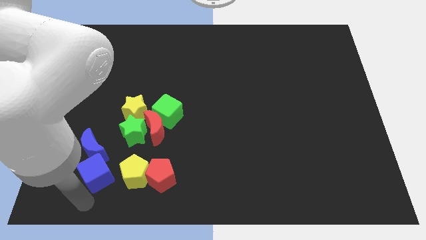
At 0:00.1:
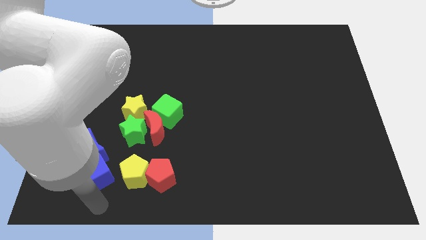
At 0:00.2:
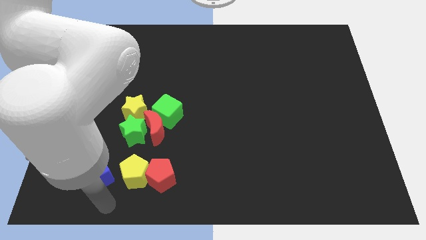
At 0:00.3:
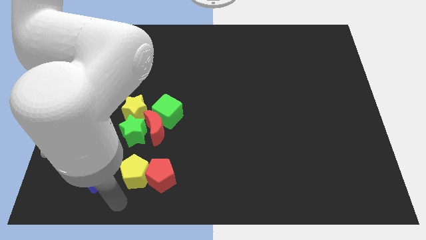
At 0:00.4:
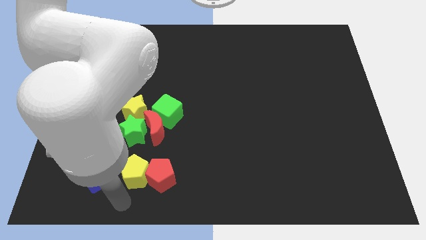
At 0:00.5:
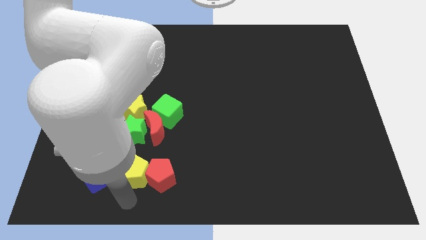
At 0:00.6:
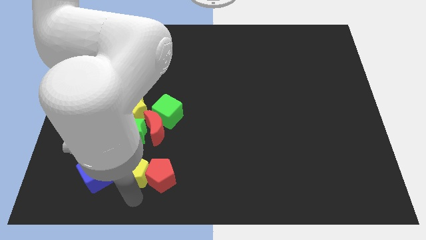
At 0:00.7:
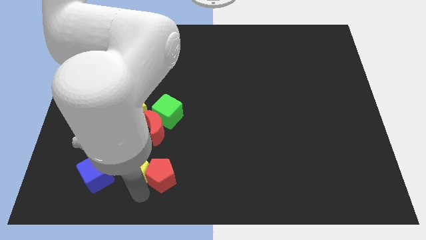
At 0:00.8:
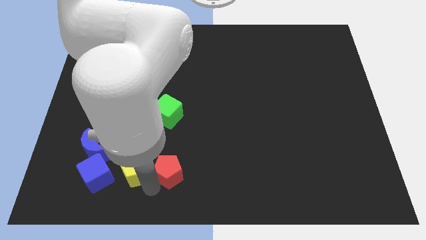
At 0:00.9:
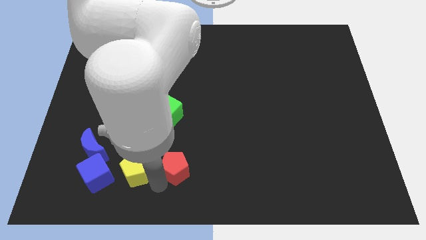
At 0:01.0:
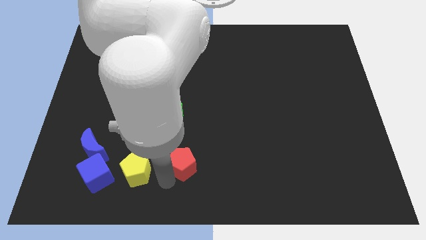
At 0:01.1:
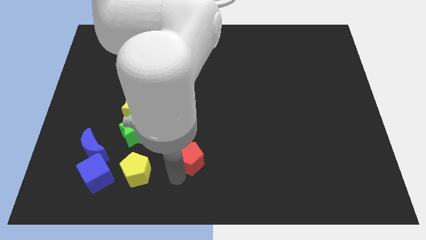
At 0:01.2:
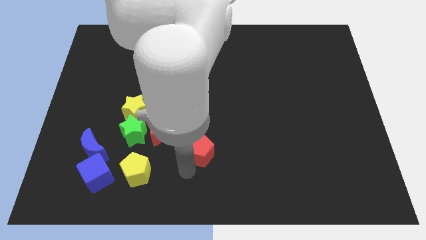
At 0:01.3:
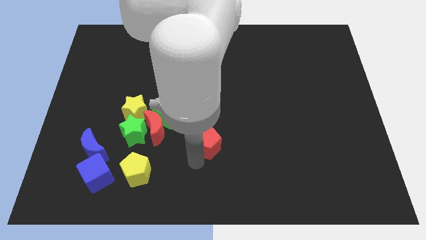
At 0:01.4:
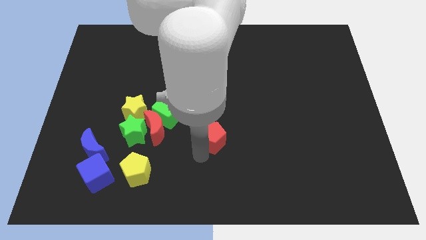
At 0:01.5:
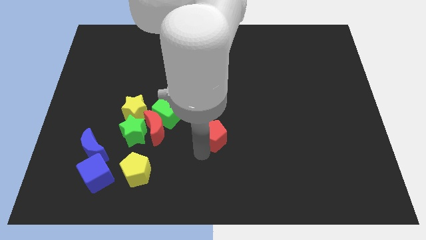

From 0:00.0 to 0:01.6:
place the red pentagon to the right of the red moon

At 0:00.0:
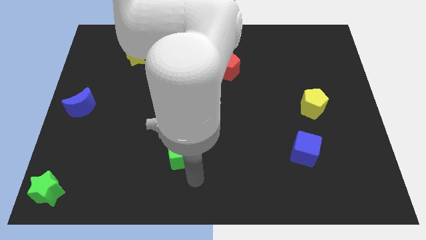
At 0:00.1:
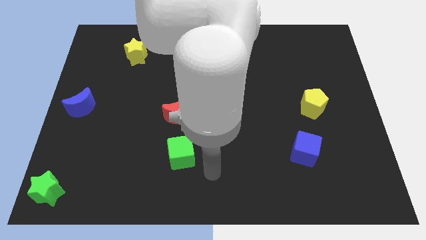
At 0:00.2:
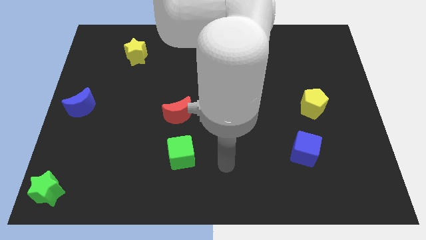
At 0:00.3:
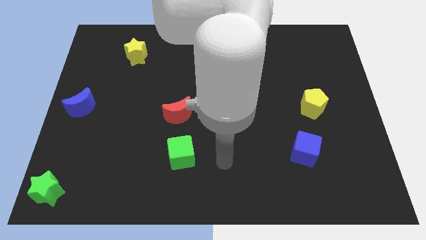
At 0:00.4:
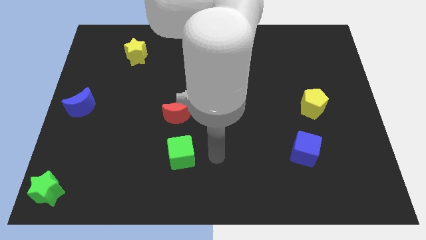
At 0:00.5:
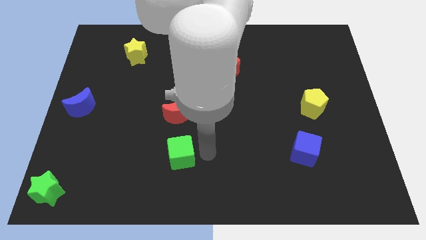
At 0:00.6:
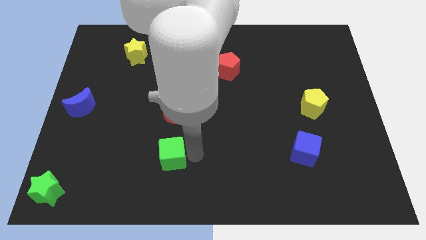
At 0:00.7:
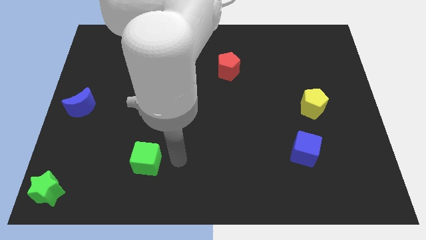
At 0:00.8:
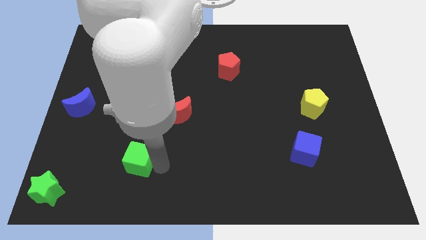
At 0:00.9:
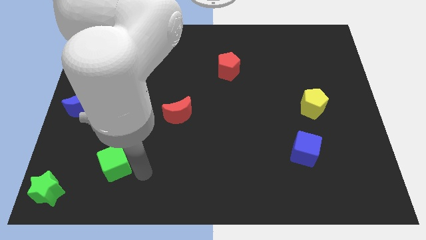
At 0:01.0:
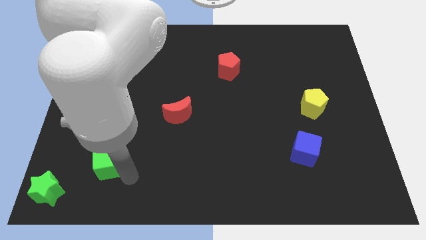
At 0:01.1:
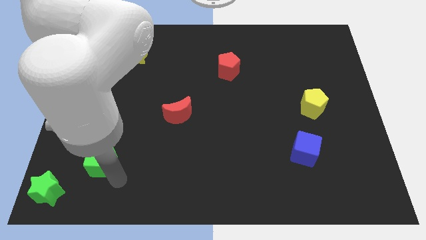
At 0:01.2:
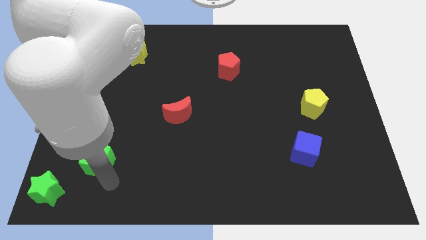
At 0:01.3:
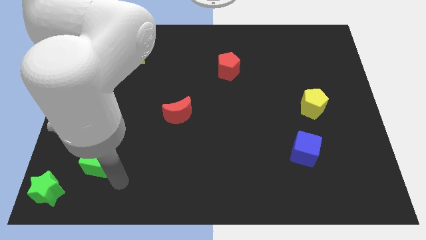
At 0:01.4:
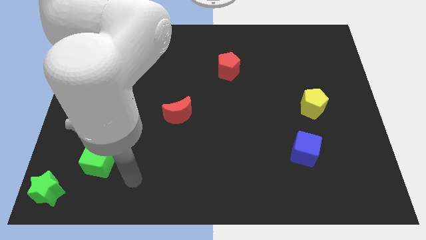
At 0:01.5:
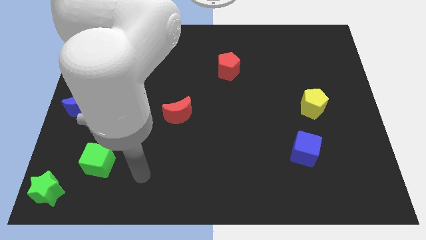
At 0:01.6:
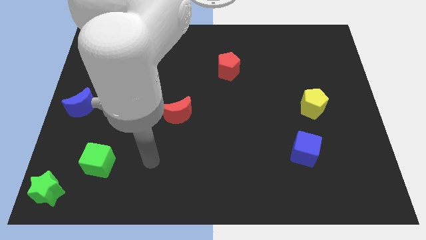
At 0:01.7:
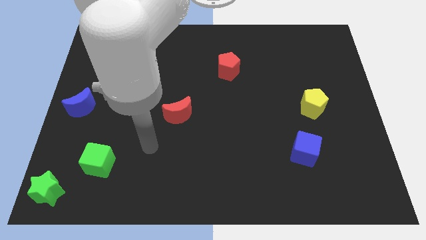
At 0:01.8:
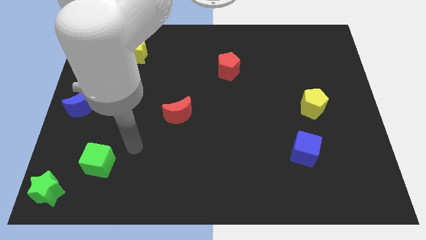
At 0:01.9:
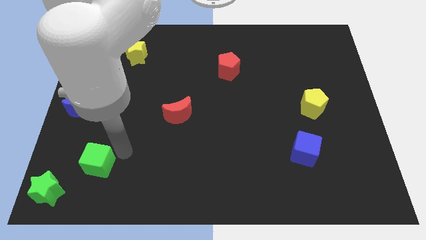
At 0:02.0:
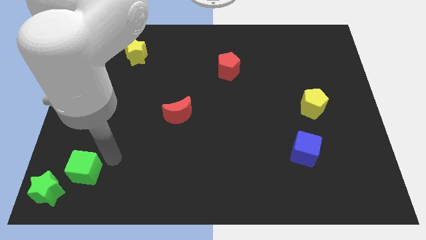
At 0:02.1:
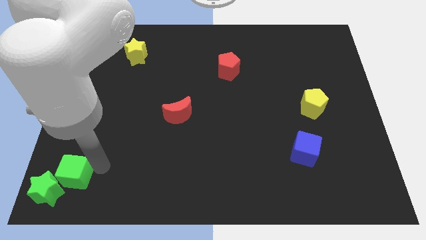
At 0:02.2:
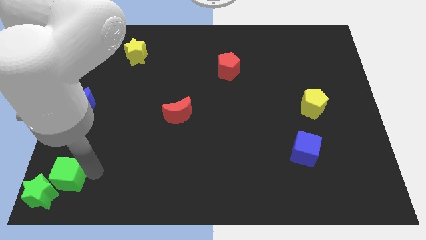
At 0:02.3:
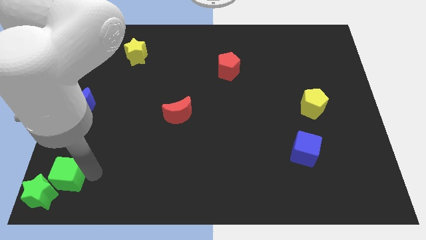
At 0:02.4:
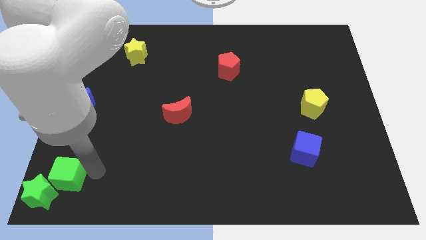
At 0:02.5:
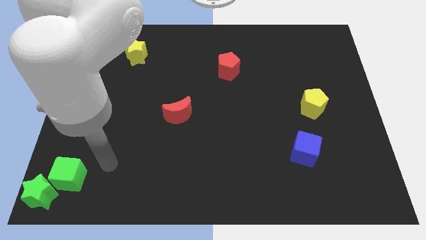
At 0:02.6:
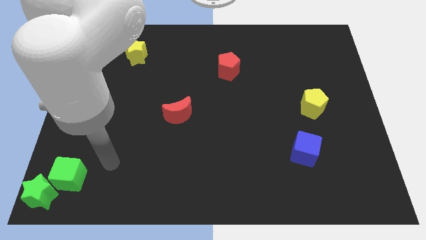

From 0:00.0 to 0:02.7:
place the green cube diagonal above the green star

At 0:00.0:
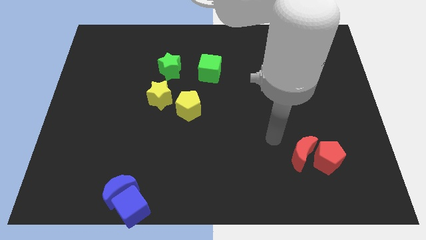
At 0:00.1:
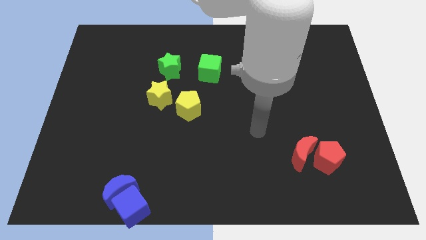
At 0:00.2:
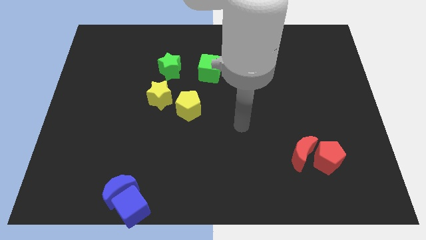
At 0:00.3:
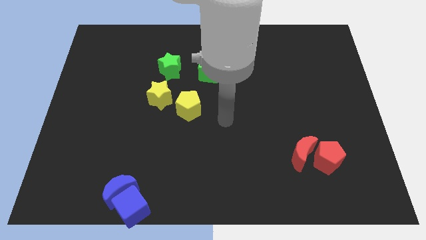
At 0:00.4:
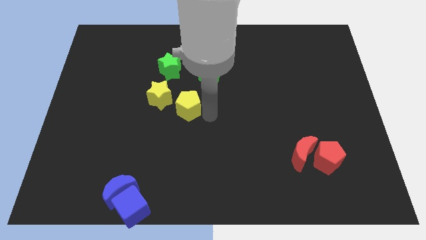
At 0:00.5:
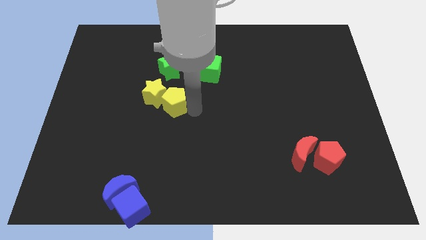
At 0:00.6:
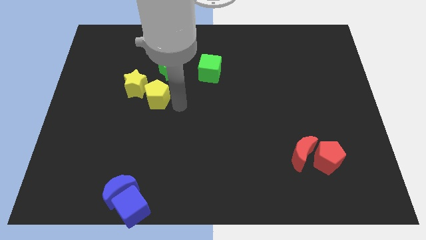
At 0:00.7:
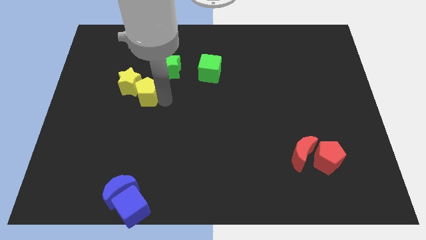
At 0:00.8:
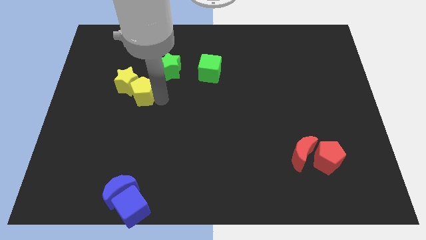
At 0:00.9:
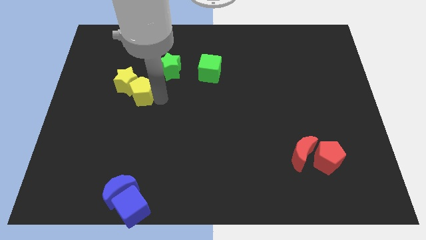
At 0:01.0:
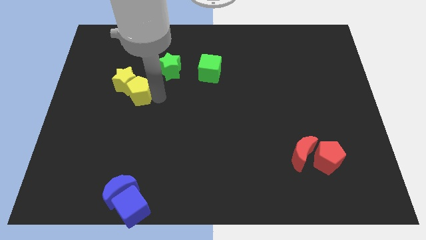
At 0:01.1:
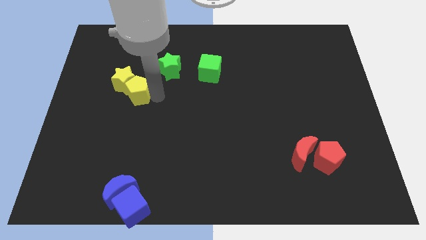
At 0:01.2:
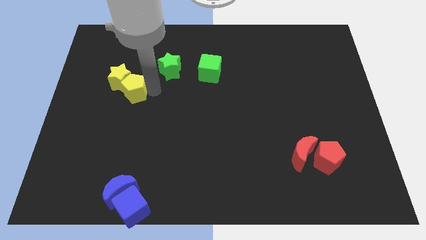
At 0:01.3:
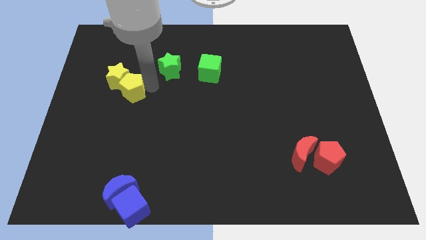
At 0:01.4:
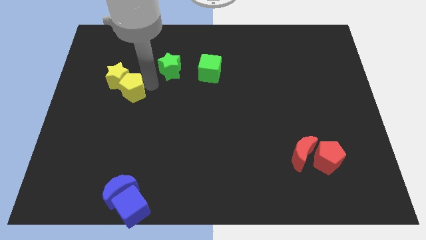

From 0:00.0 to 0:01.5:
move yellow pentagon into yellow star

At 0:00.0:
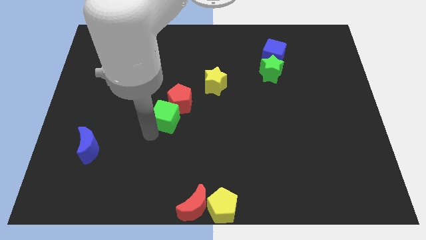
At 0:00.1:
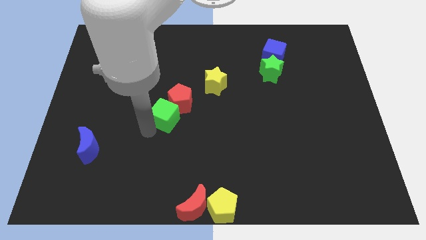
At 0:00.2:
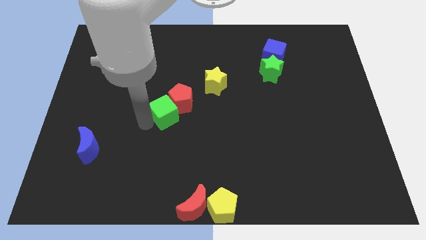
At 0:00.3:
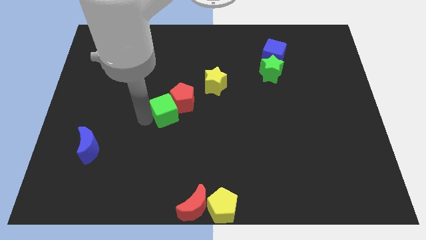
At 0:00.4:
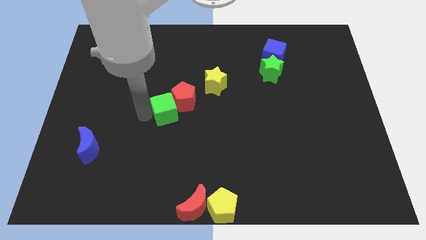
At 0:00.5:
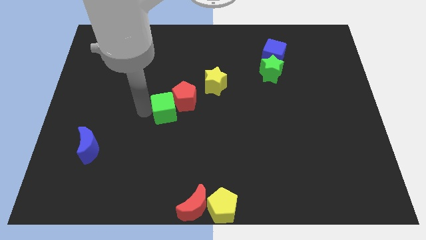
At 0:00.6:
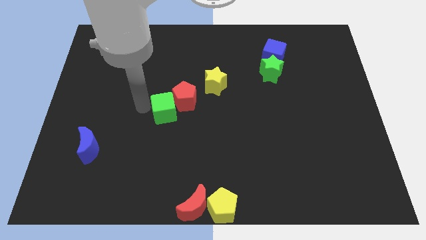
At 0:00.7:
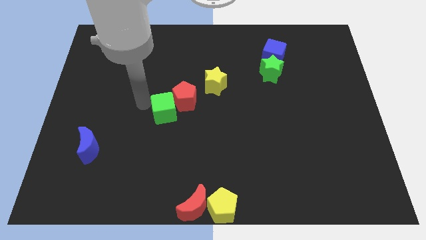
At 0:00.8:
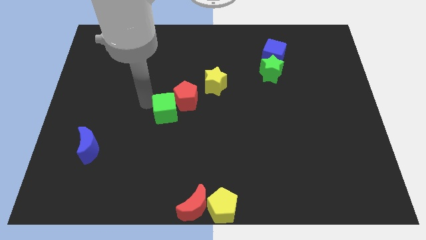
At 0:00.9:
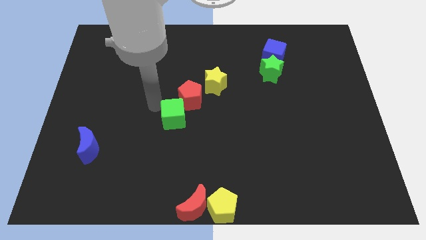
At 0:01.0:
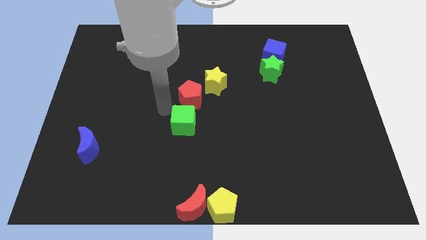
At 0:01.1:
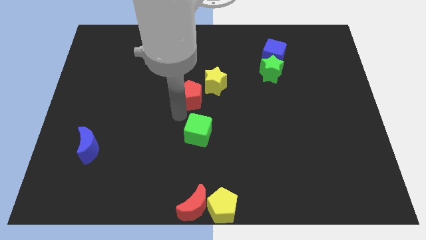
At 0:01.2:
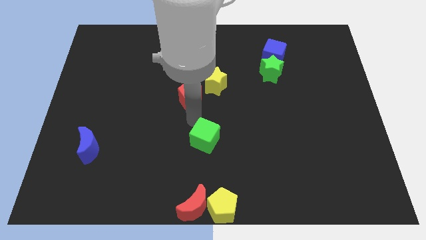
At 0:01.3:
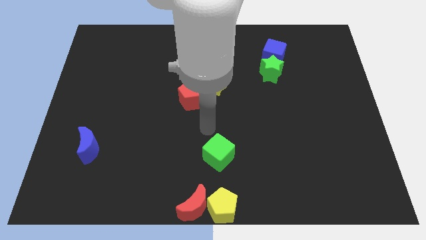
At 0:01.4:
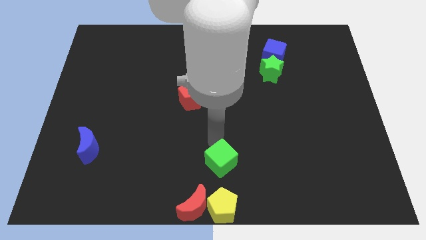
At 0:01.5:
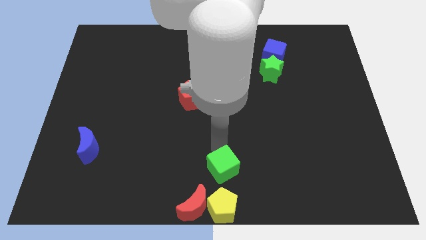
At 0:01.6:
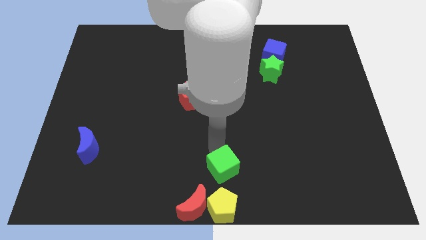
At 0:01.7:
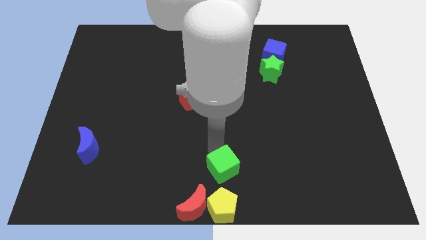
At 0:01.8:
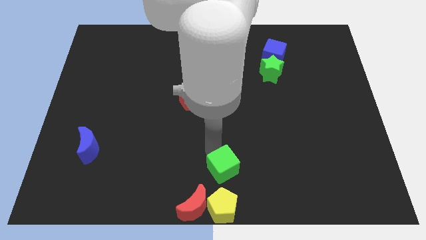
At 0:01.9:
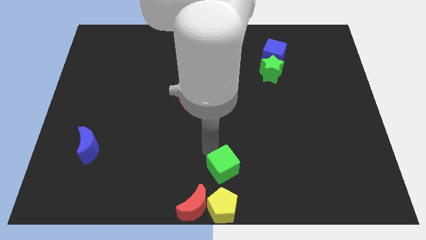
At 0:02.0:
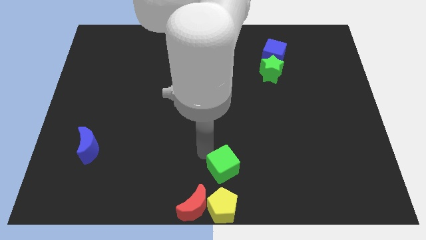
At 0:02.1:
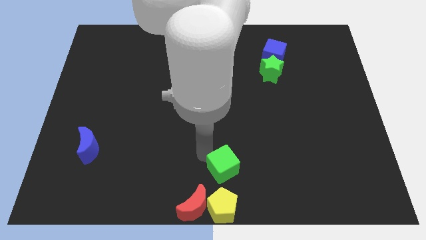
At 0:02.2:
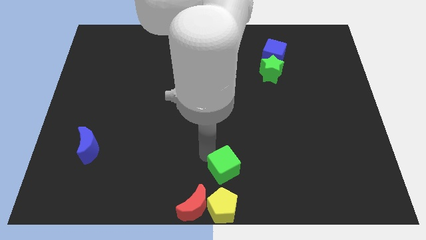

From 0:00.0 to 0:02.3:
push green cube above yellow pentagon

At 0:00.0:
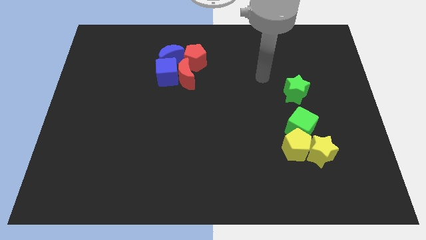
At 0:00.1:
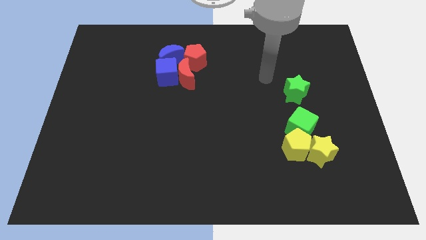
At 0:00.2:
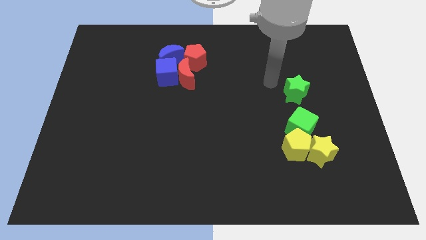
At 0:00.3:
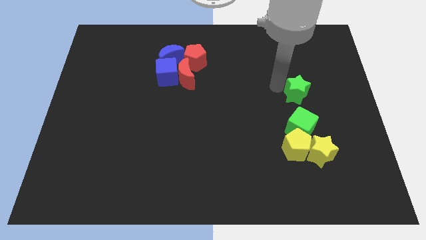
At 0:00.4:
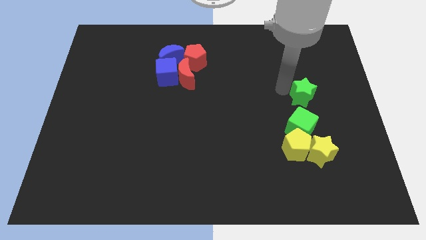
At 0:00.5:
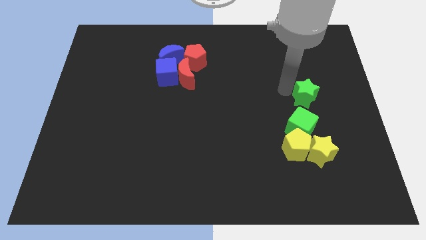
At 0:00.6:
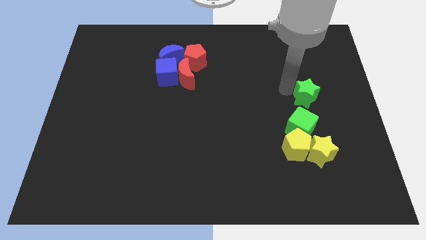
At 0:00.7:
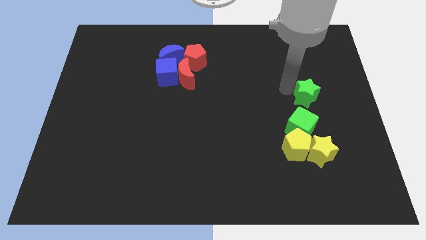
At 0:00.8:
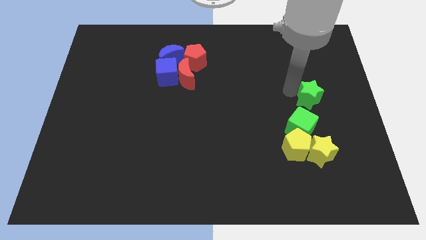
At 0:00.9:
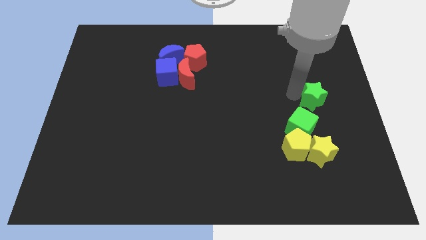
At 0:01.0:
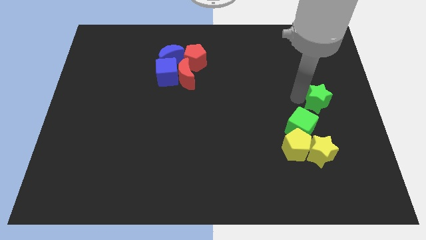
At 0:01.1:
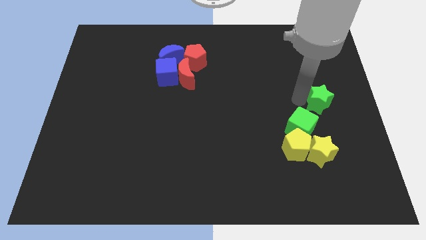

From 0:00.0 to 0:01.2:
slide the green star diagonally top right to the green cube
